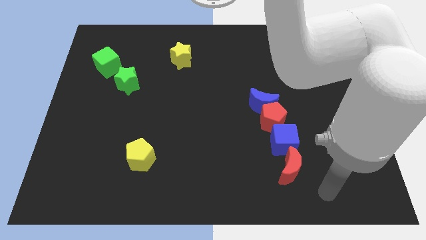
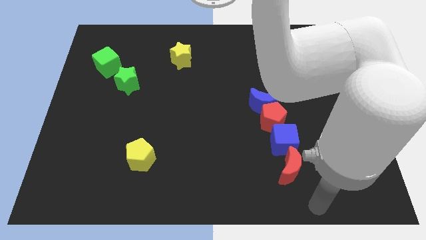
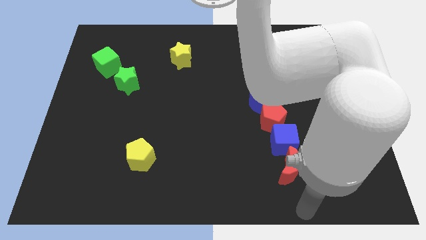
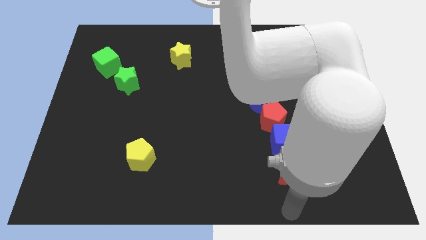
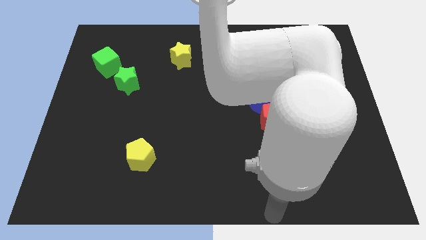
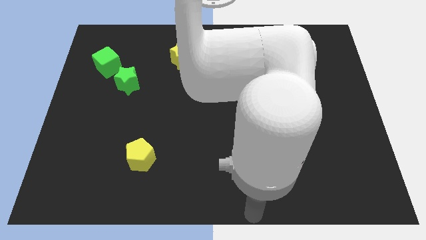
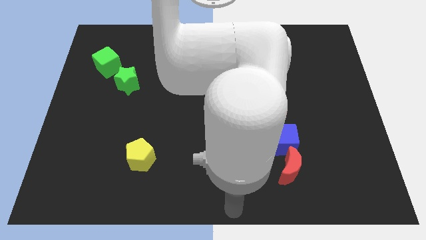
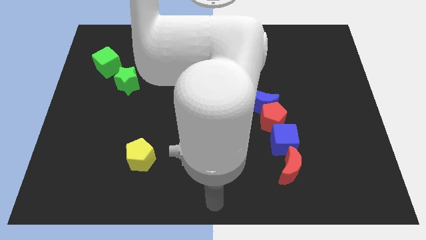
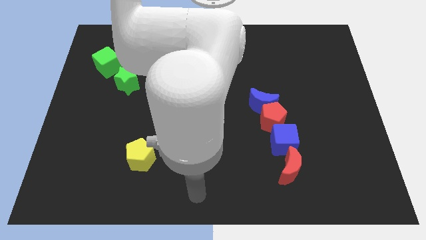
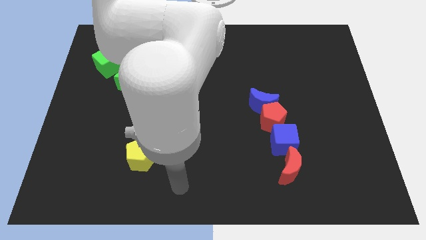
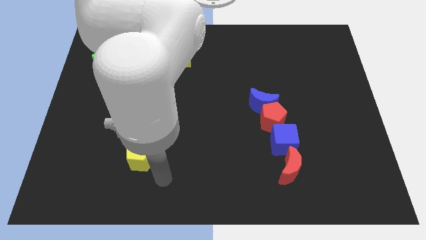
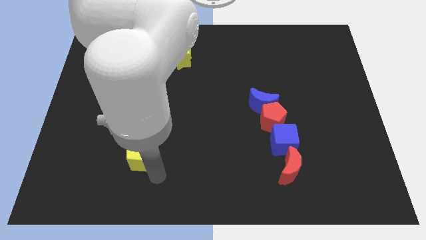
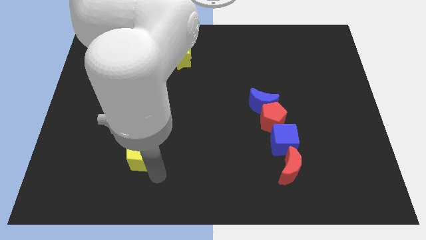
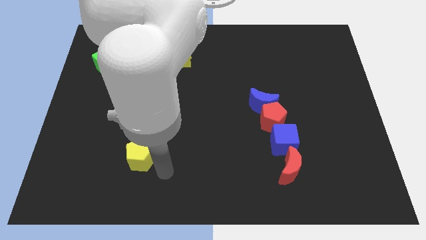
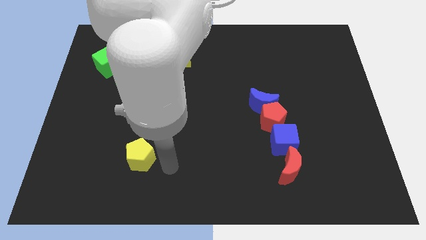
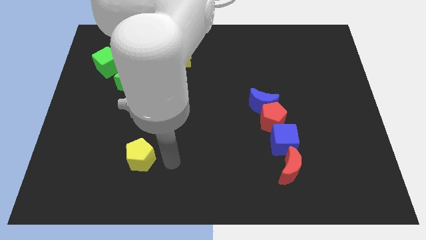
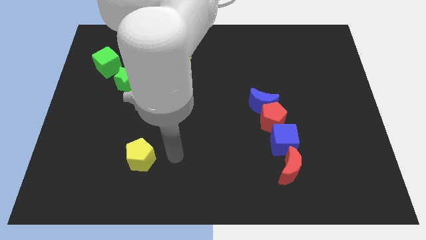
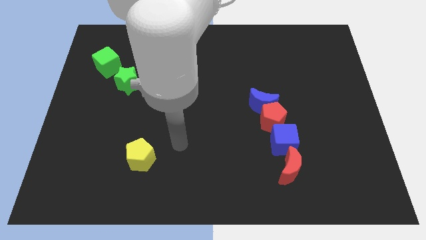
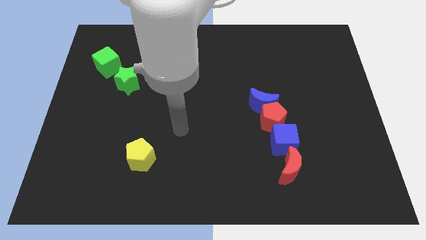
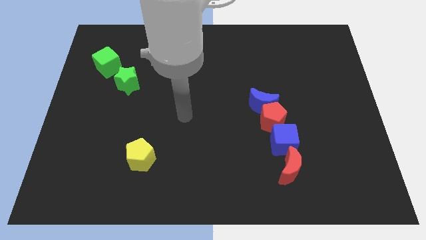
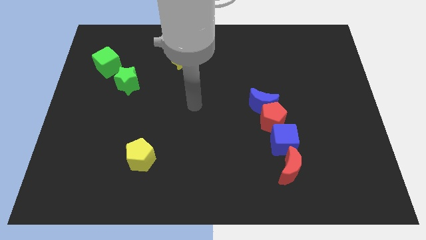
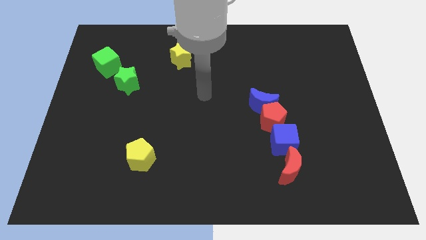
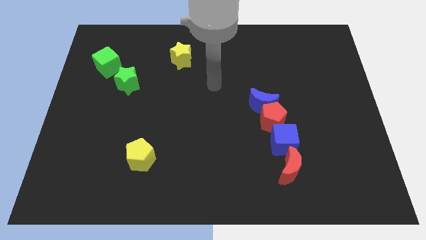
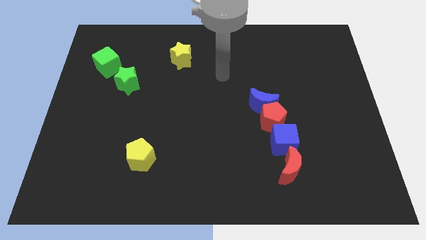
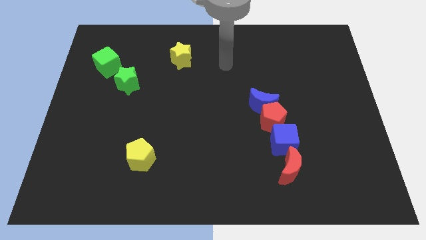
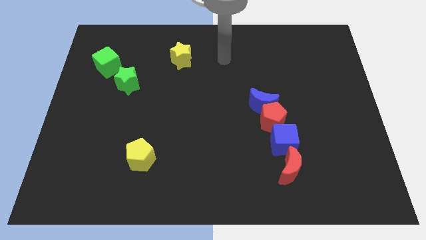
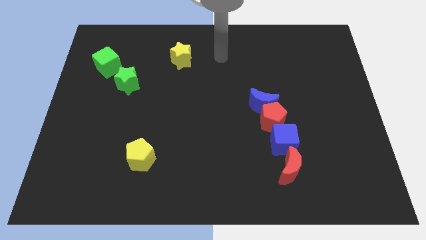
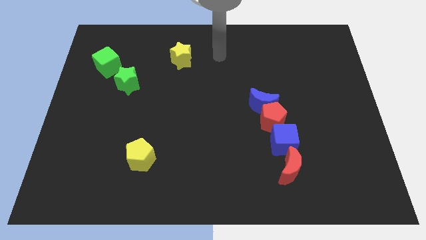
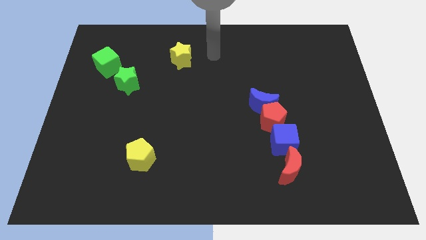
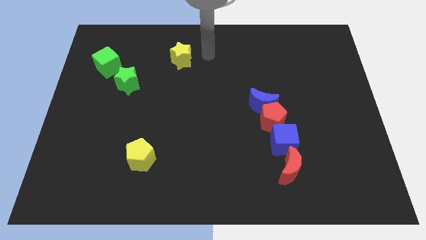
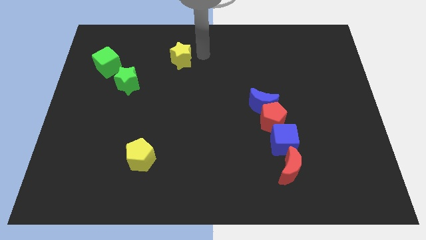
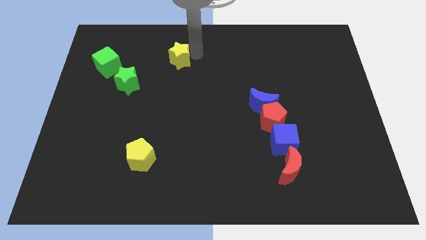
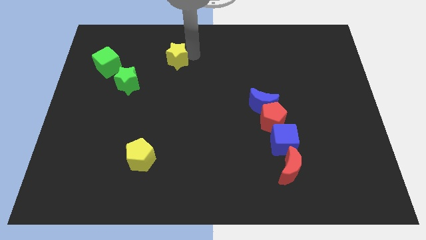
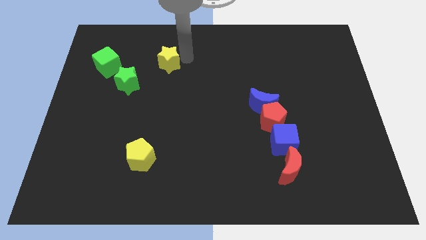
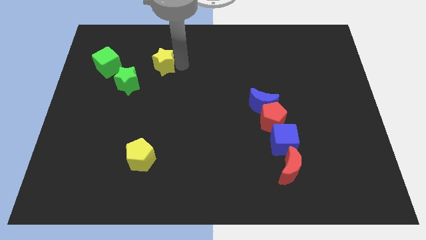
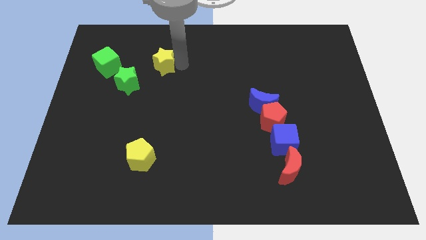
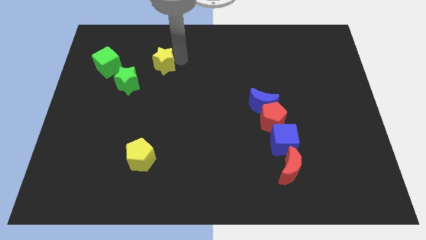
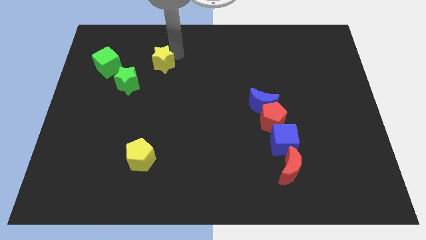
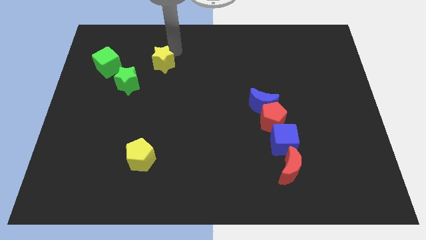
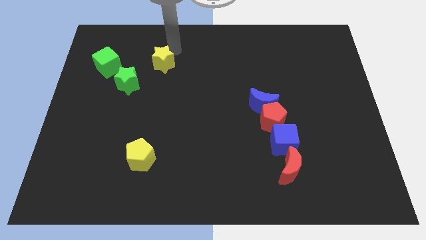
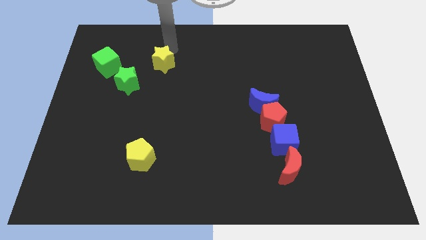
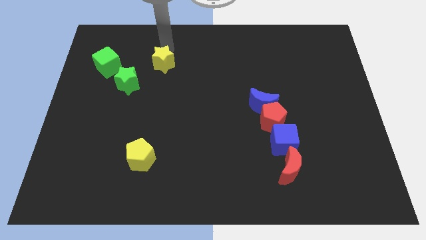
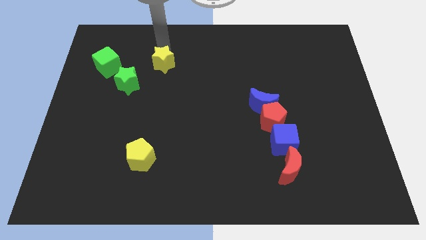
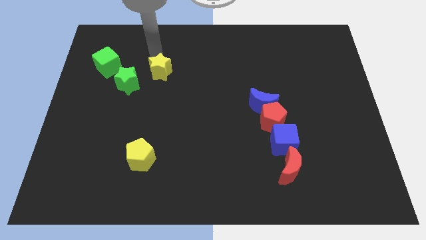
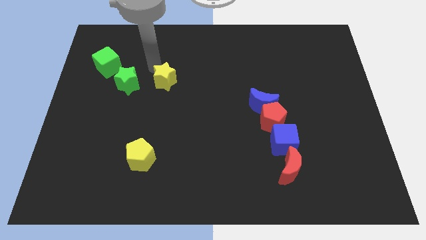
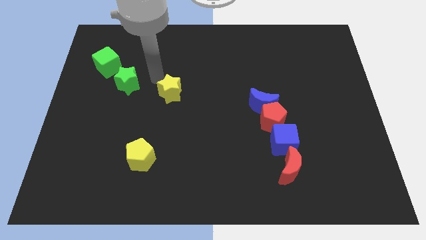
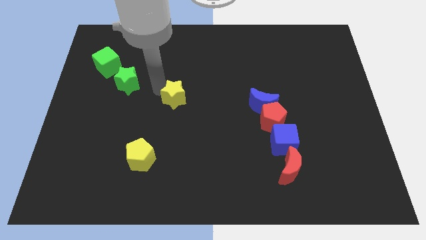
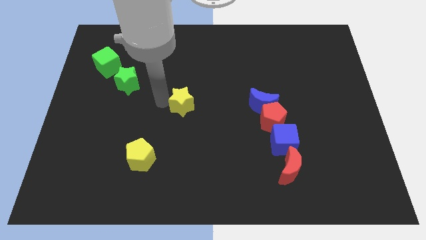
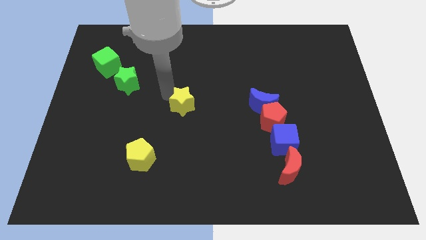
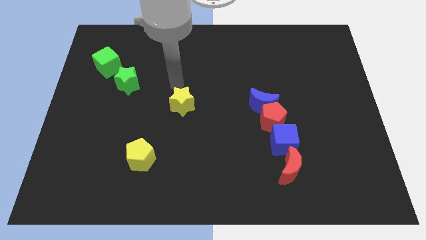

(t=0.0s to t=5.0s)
move the yellow star to the center of the board

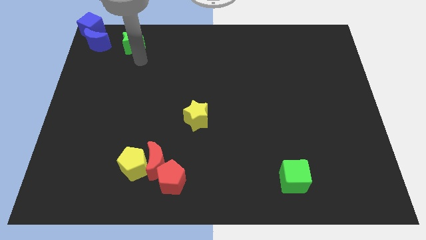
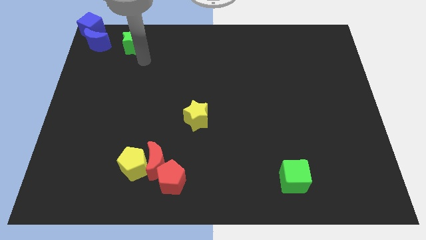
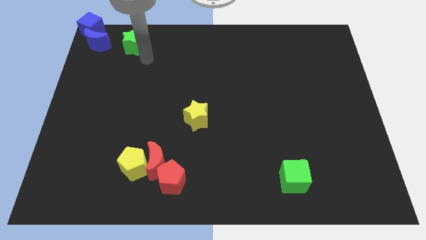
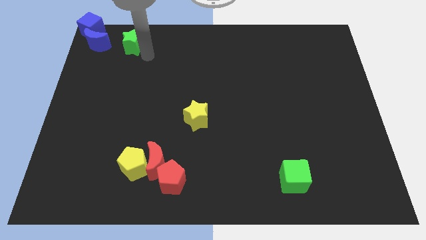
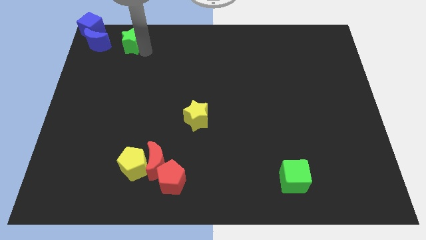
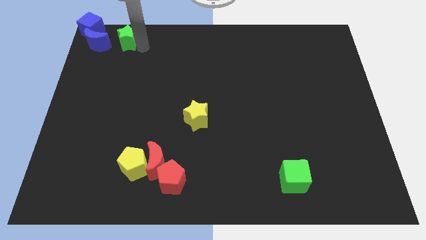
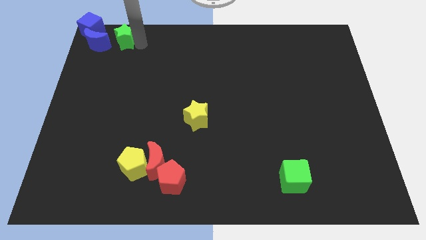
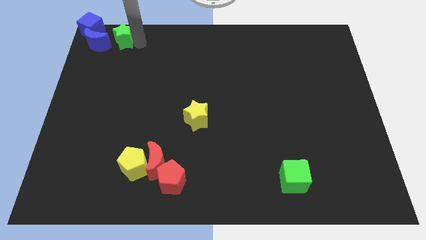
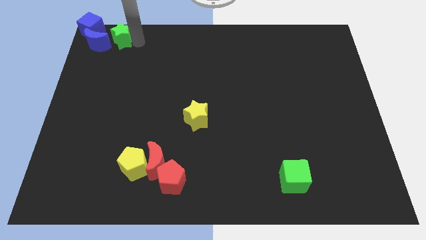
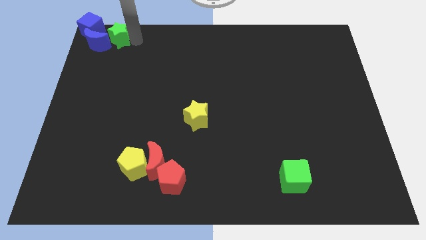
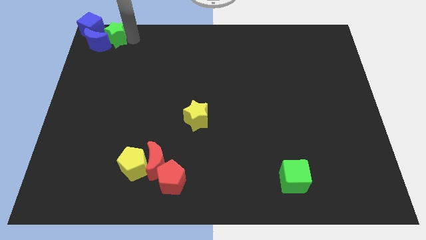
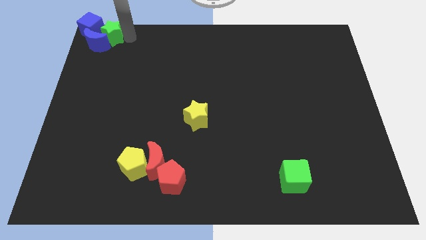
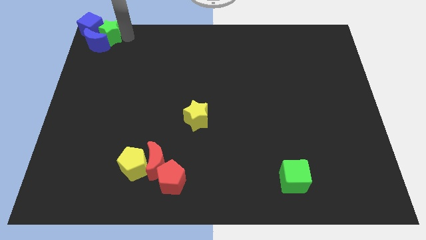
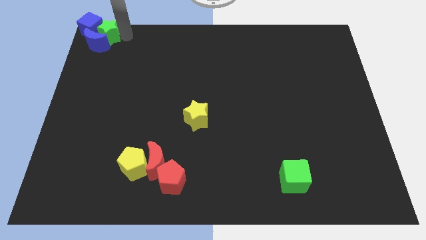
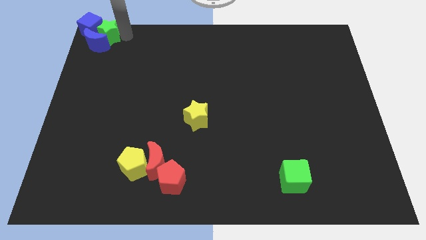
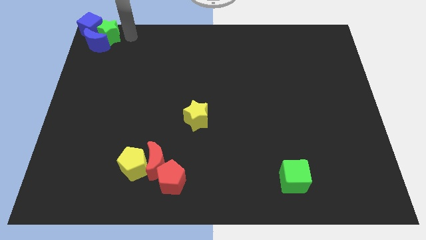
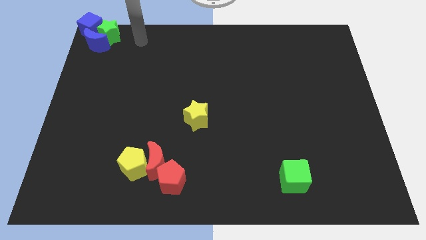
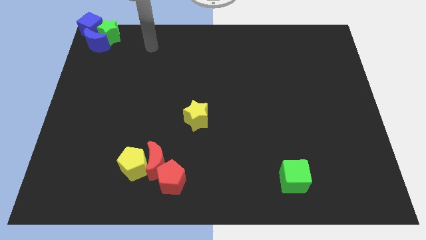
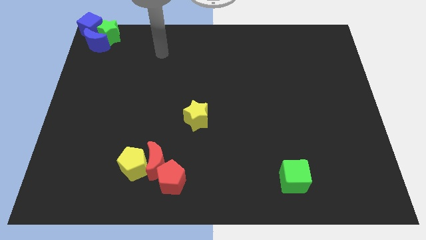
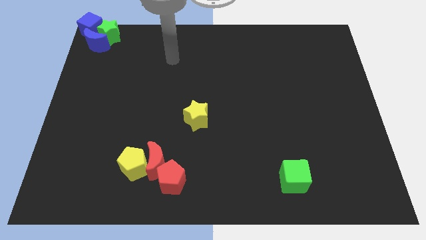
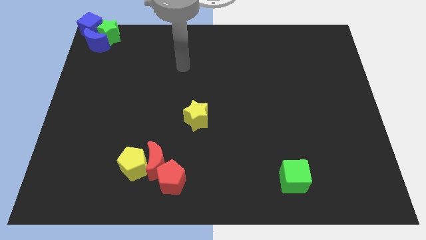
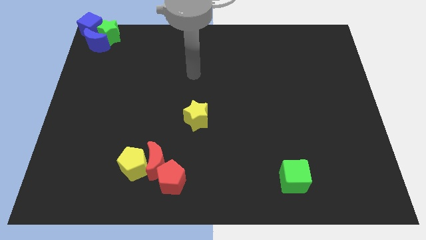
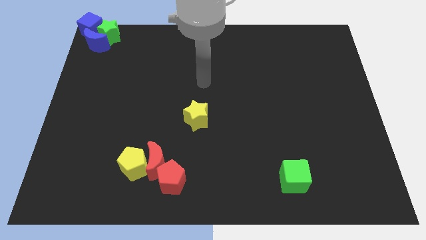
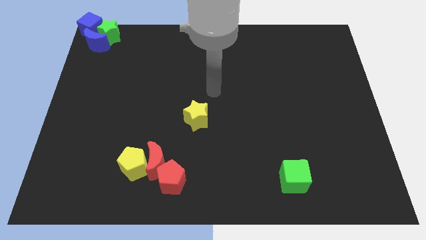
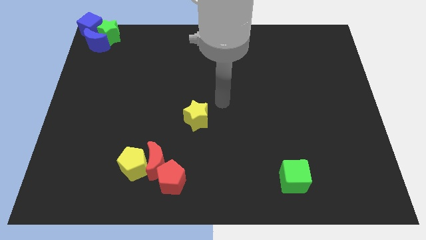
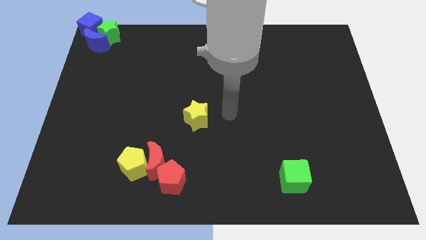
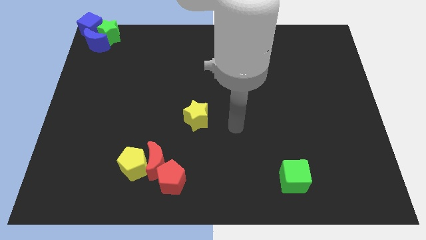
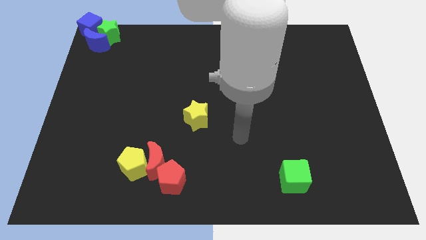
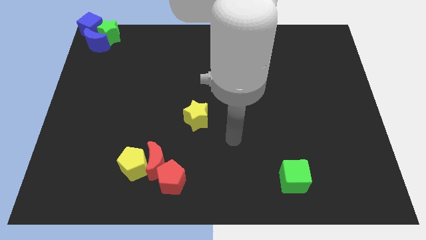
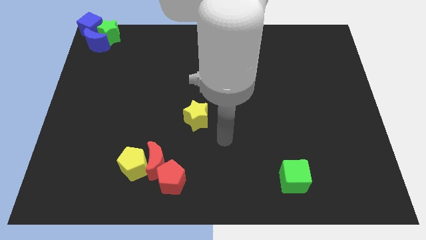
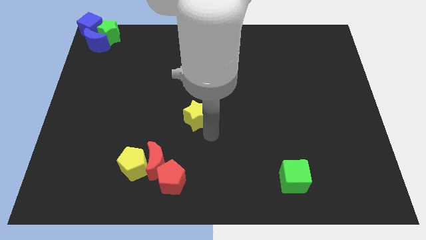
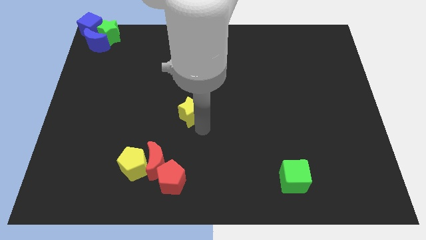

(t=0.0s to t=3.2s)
put the green star at the top left corner

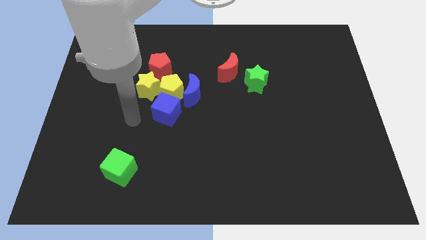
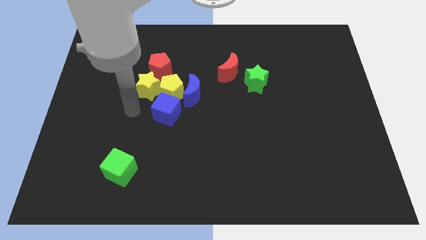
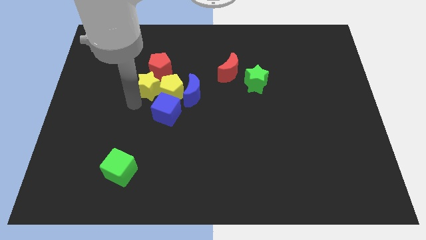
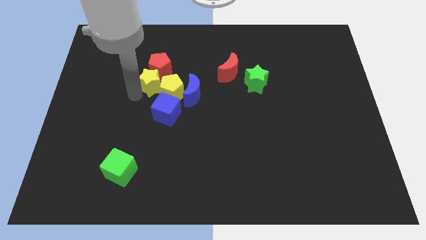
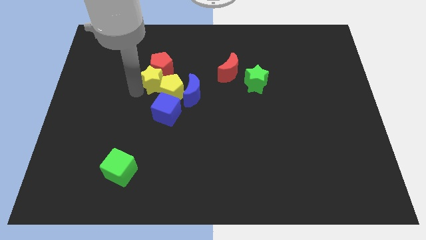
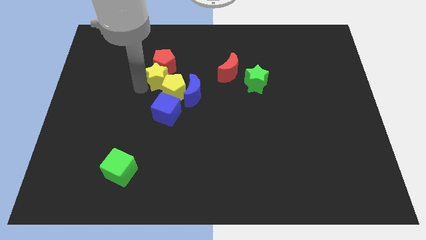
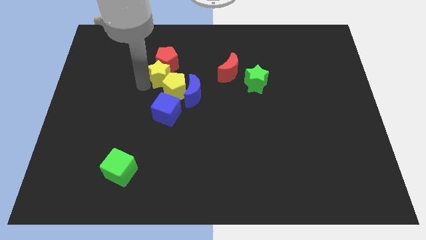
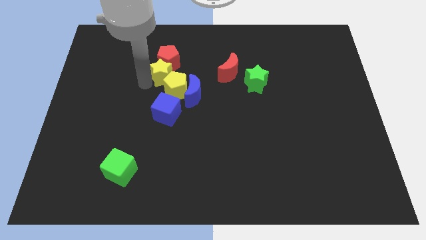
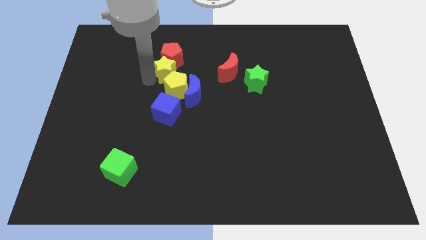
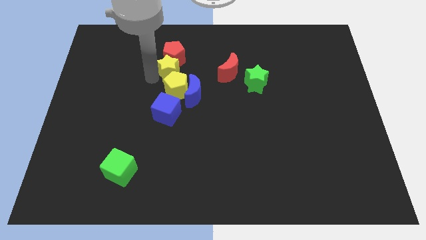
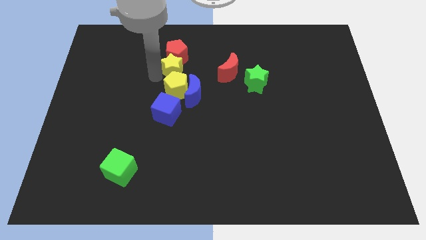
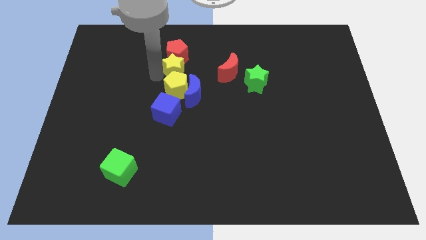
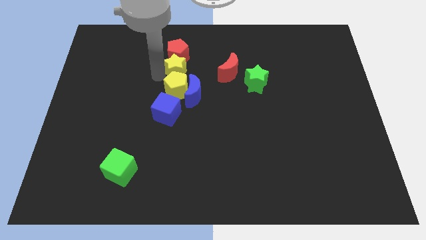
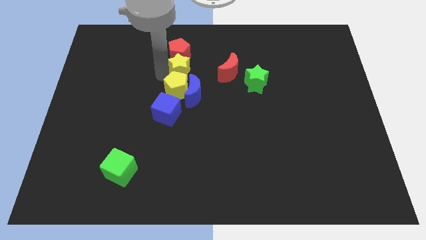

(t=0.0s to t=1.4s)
drag the yellow star to the bottom side of the red pentagon
